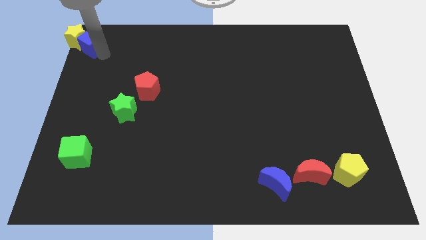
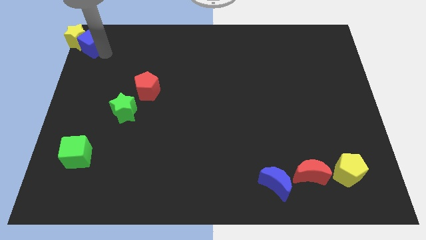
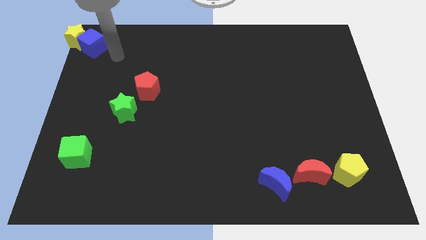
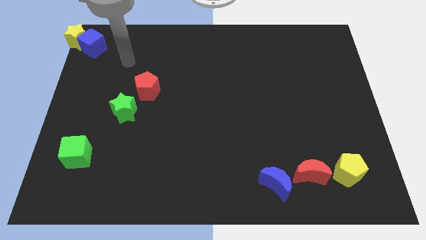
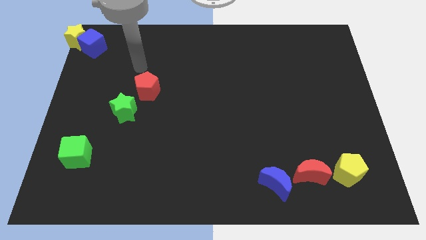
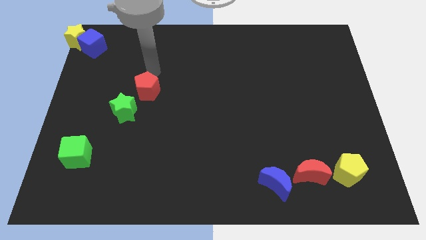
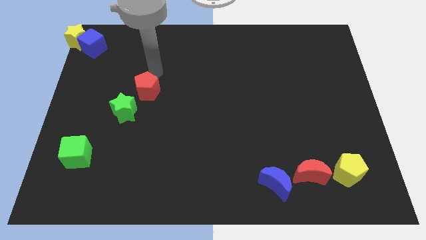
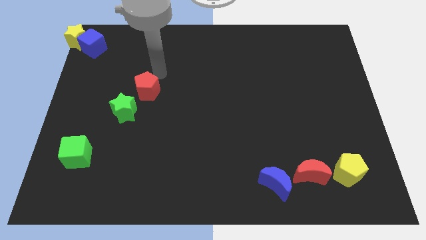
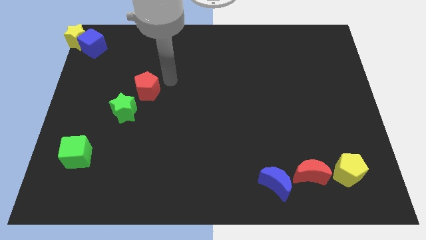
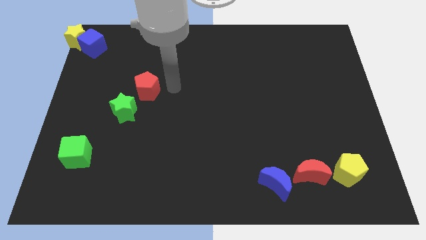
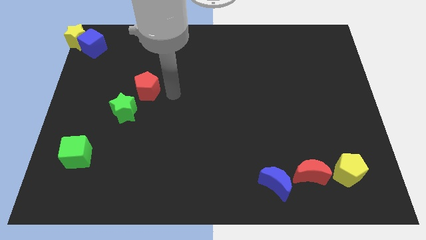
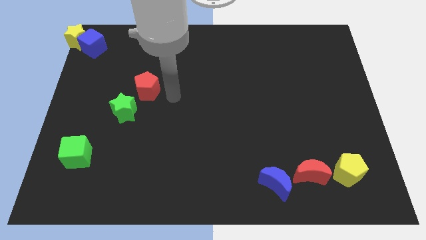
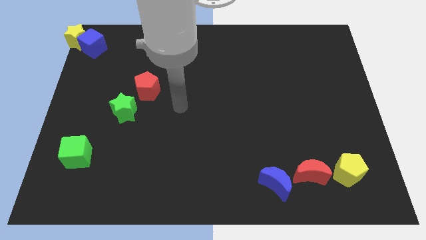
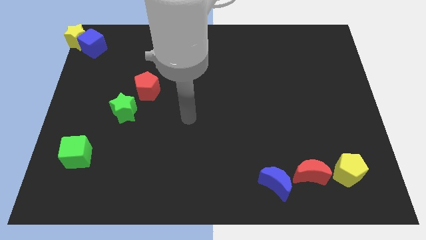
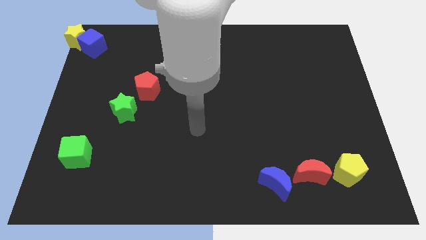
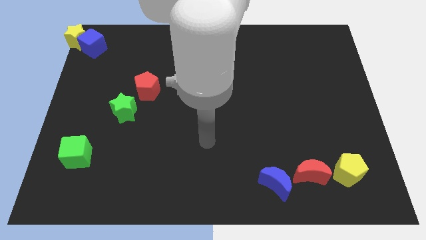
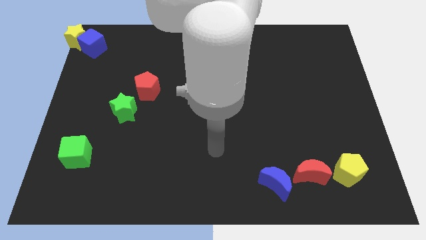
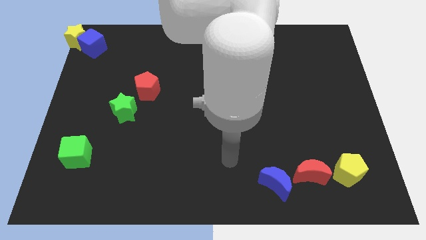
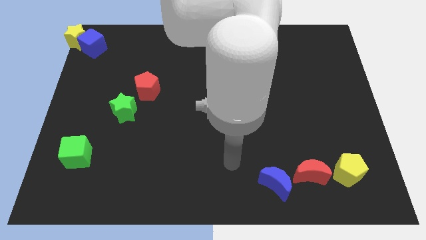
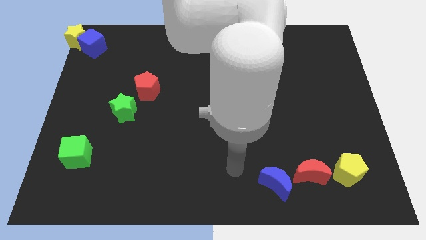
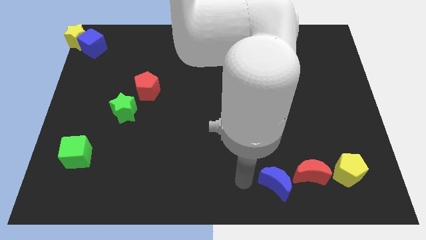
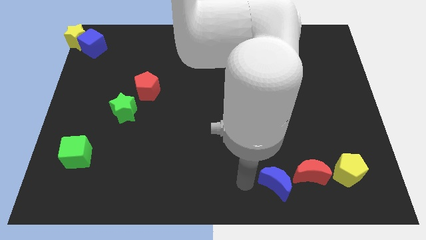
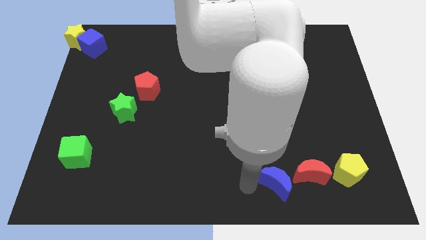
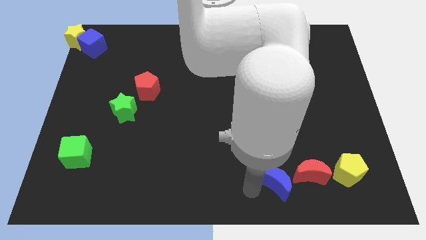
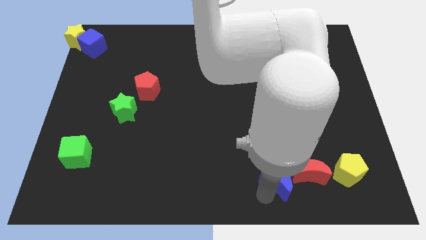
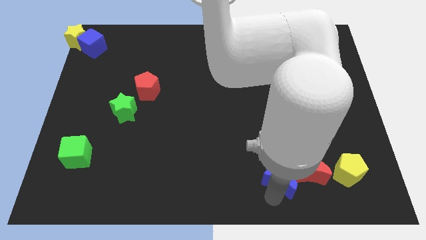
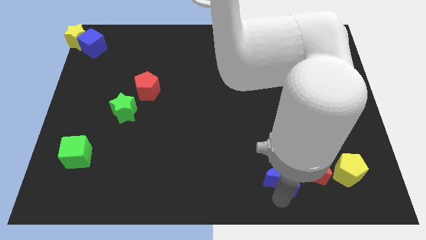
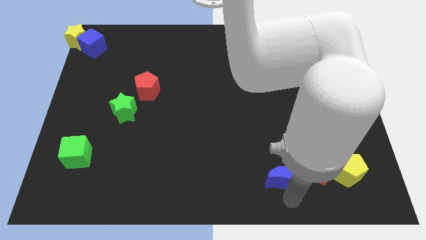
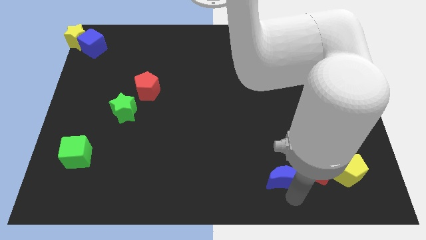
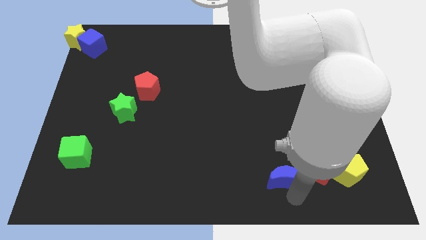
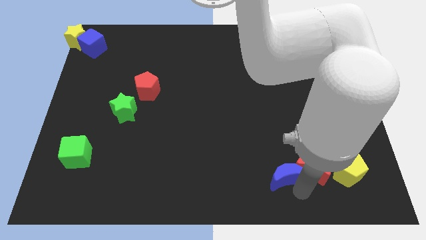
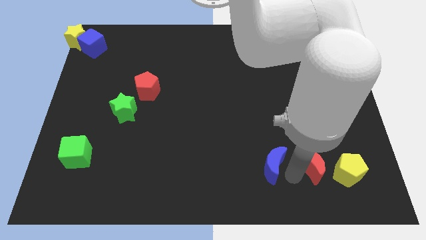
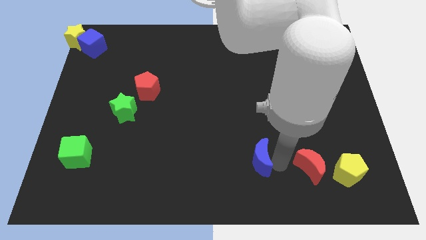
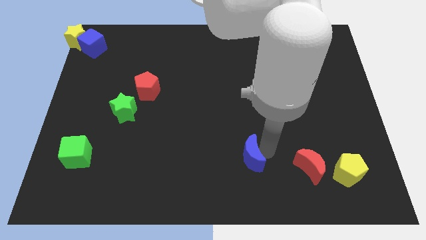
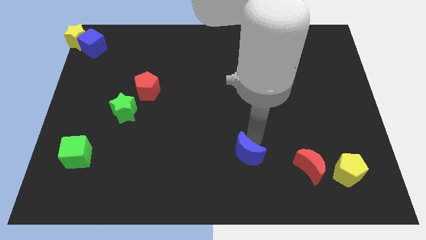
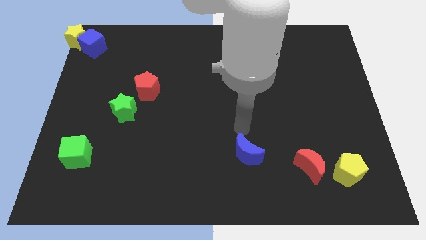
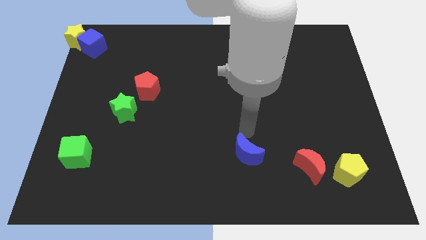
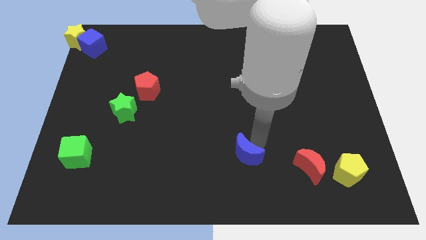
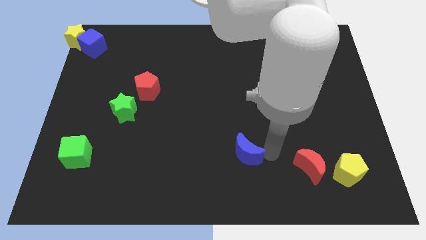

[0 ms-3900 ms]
push the blue crescent to the top left of the red crescent

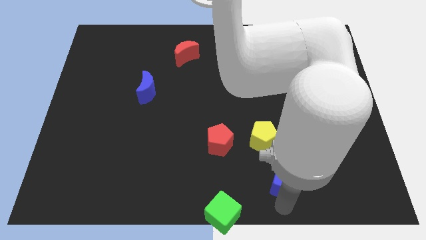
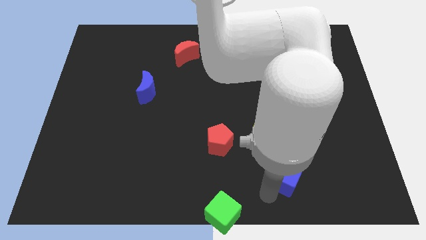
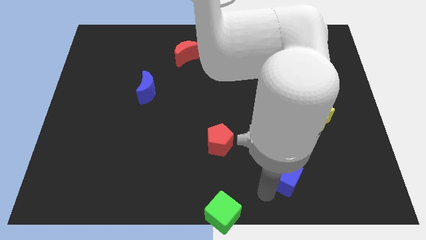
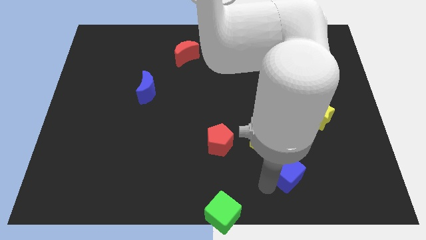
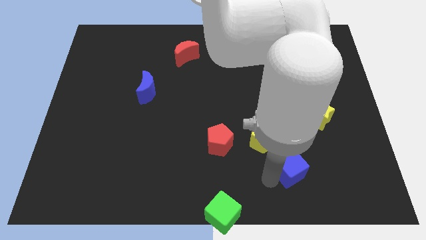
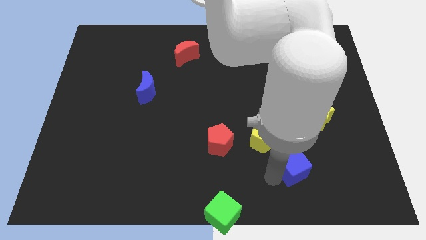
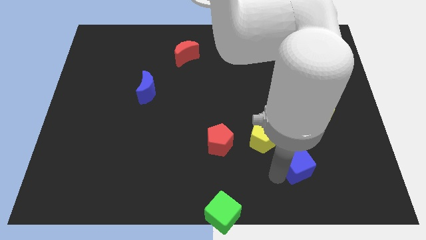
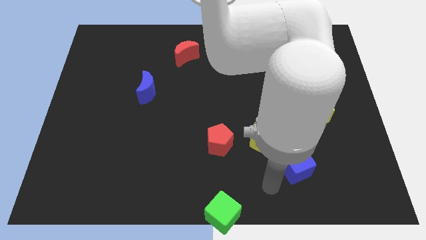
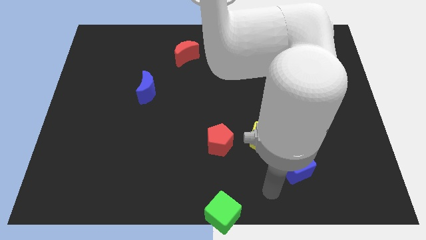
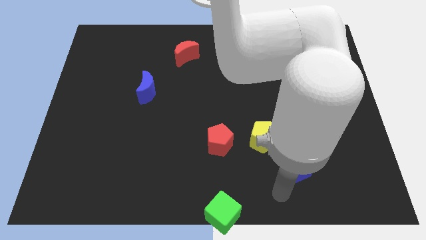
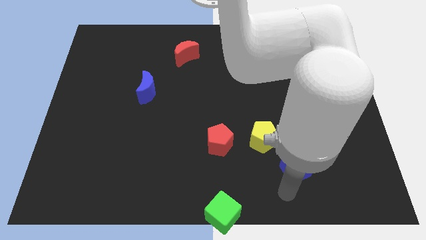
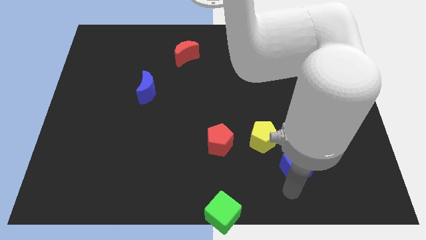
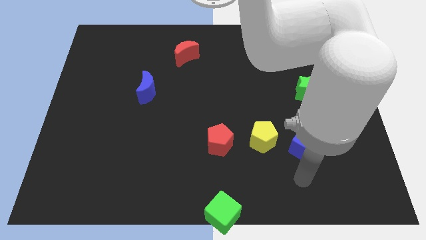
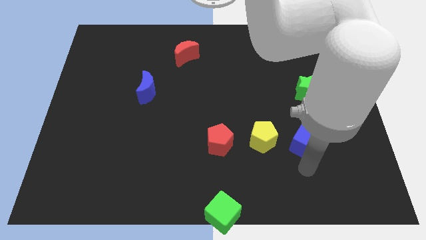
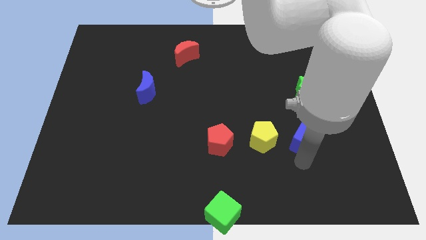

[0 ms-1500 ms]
move the blue cube to the right of the yellow pentagon

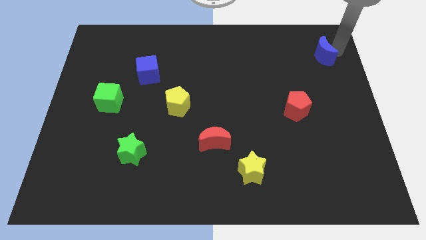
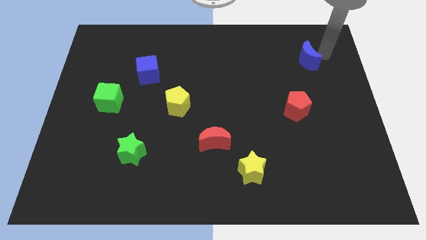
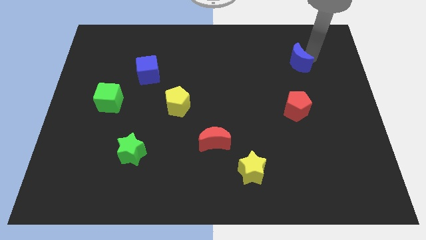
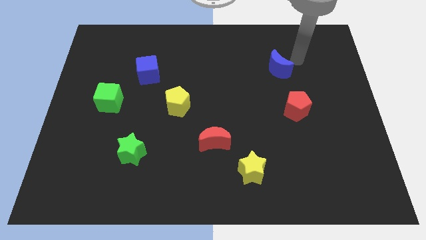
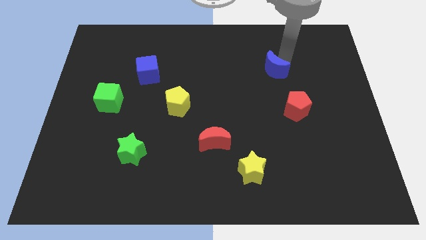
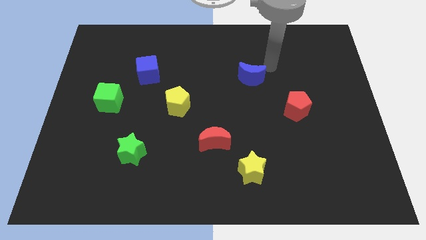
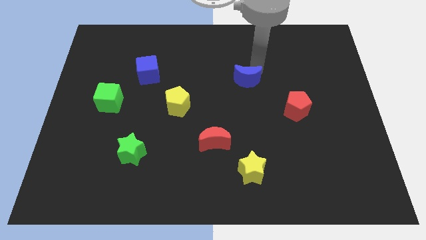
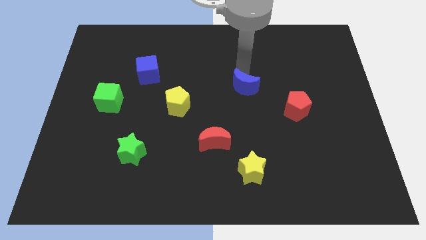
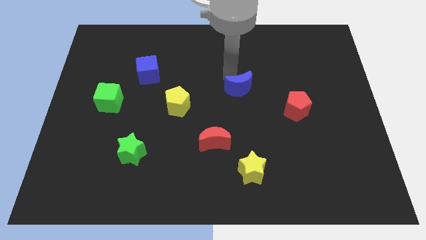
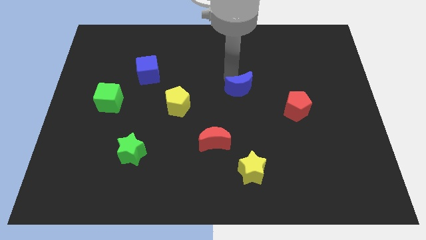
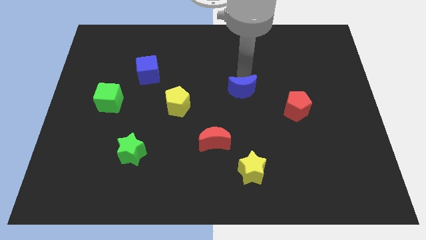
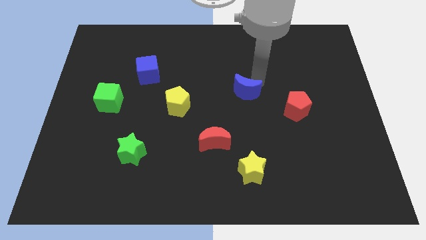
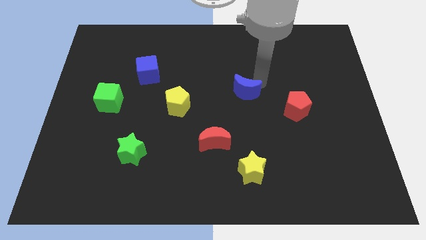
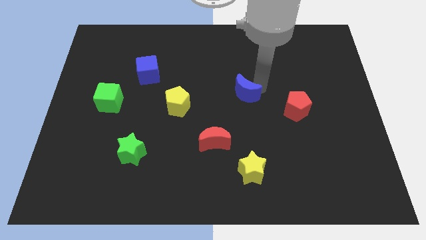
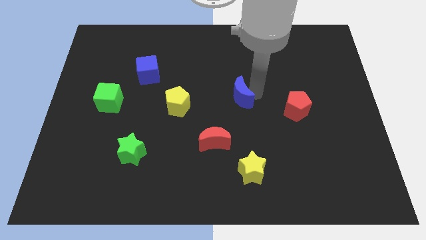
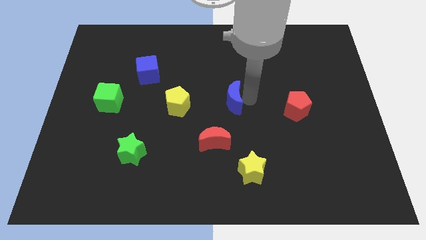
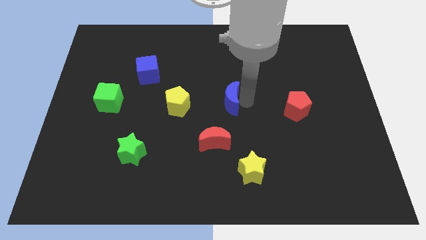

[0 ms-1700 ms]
move the blue crescent in berween the red pentagon adn yellow pentagon

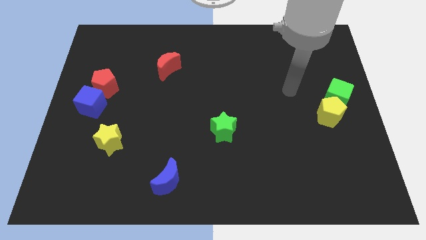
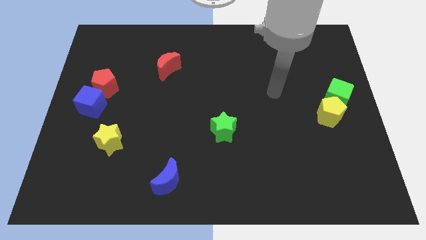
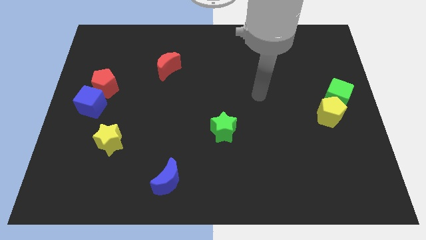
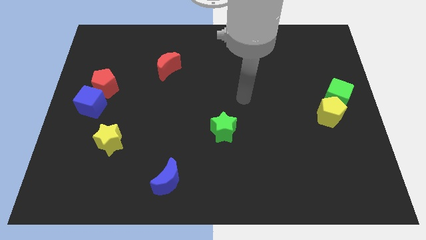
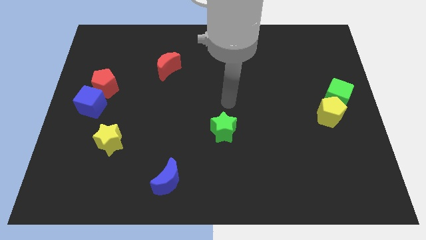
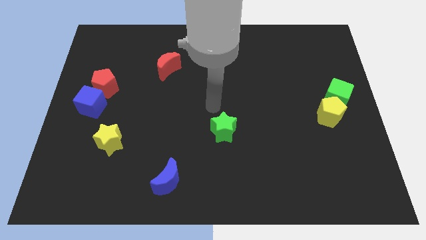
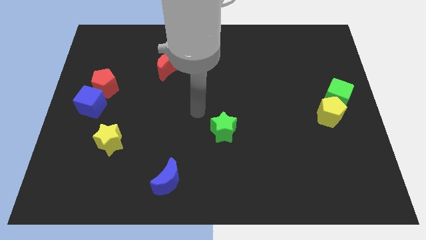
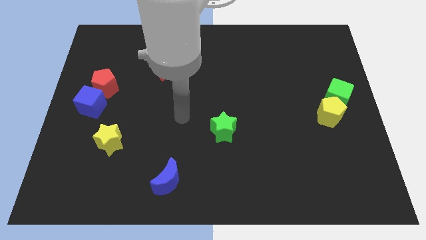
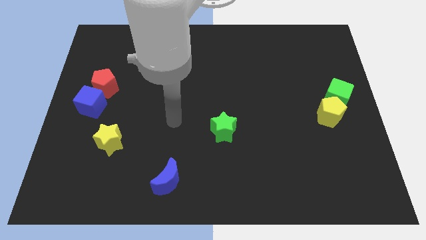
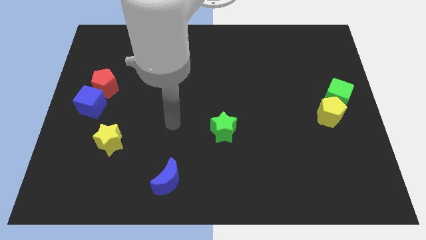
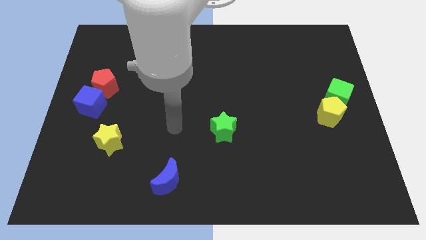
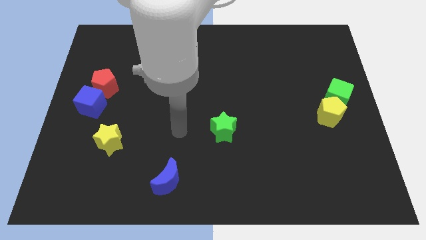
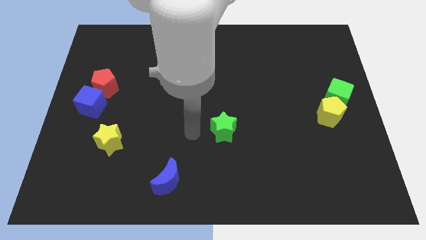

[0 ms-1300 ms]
point your hand at the left of the green star

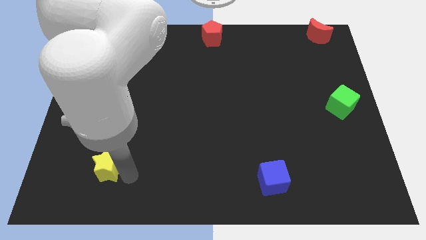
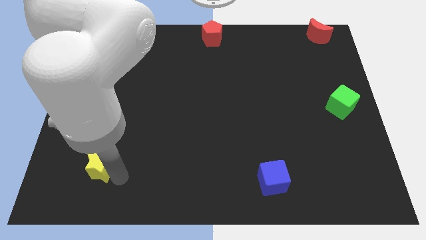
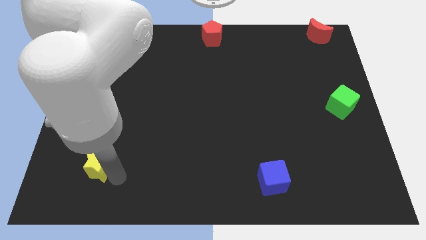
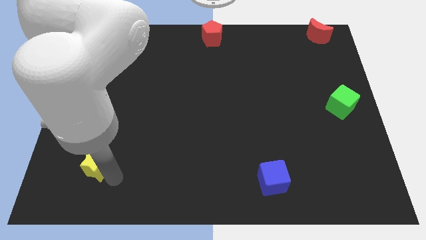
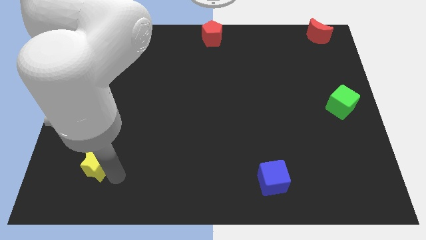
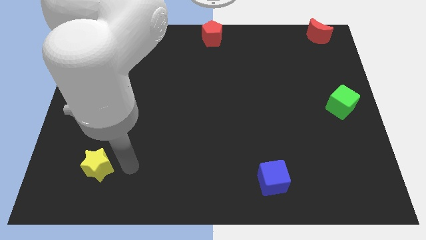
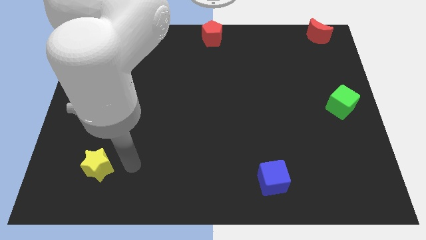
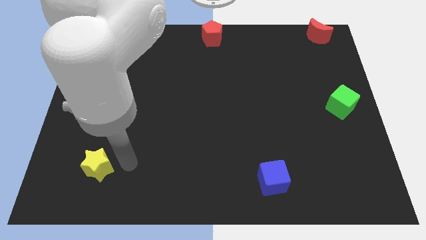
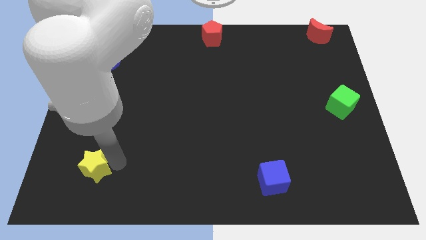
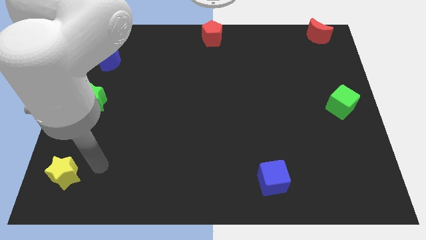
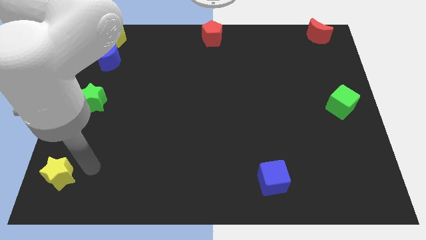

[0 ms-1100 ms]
place the yellow star towards the bottom left side of the board
